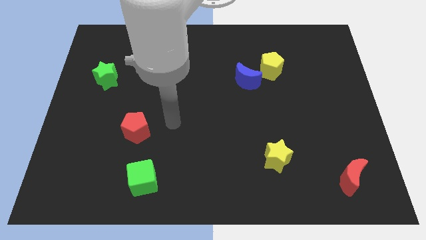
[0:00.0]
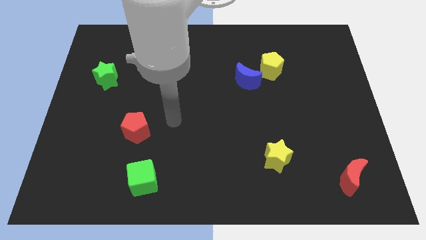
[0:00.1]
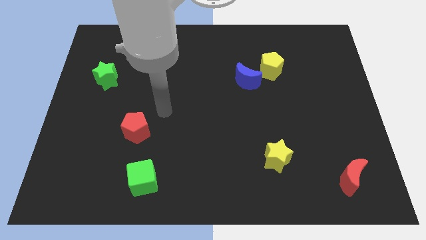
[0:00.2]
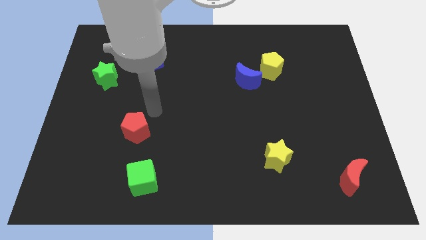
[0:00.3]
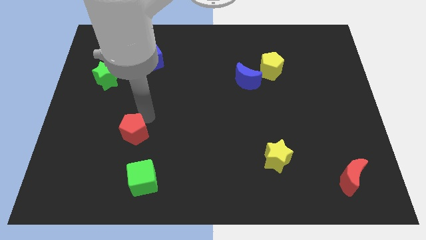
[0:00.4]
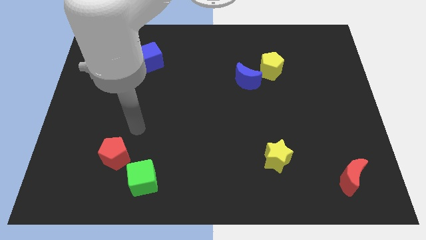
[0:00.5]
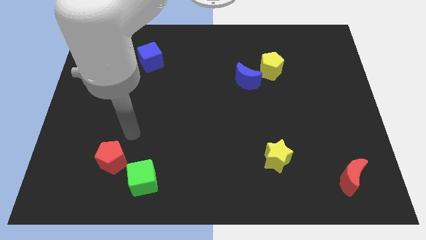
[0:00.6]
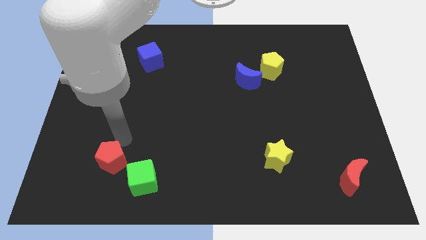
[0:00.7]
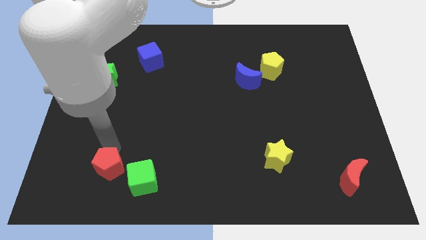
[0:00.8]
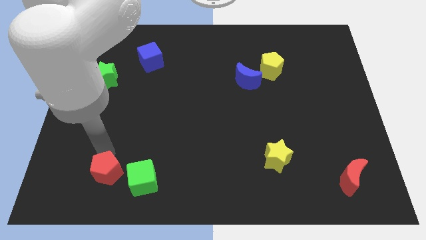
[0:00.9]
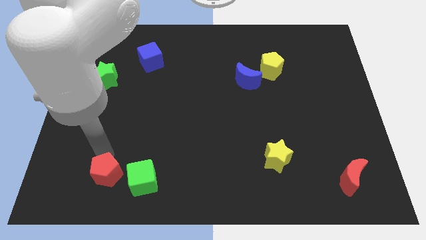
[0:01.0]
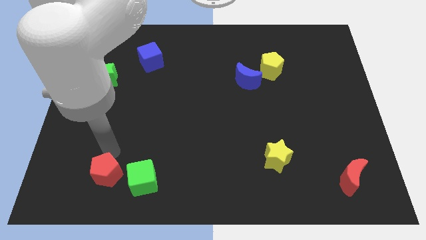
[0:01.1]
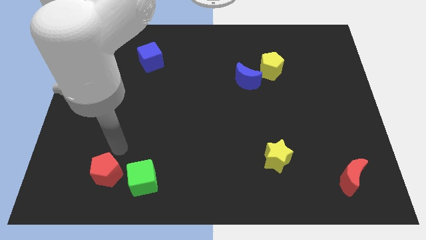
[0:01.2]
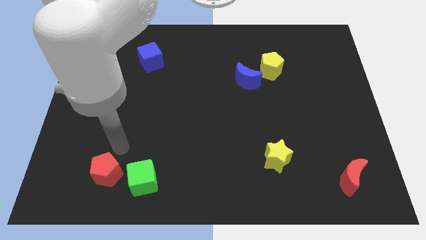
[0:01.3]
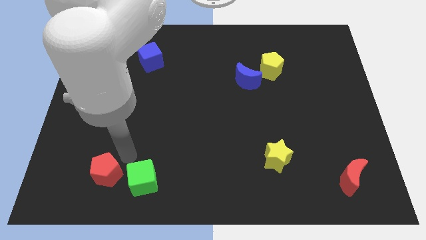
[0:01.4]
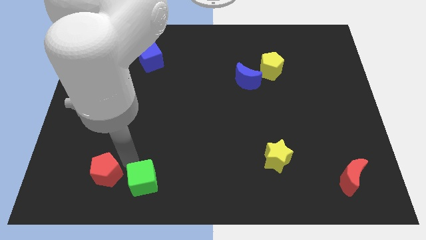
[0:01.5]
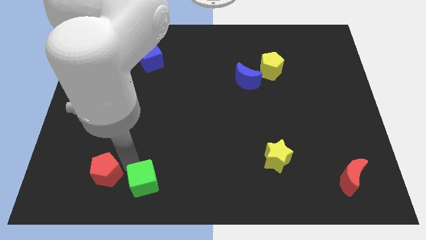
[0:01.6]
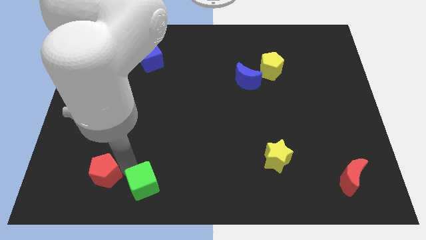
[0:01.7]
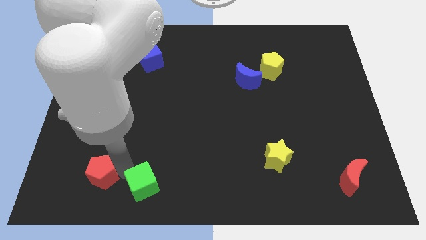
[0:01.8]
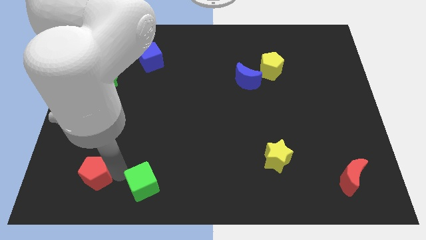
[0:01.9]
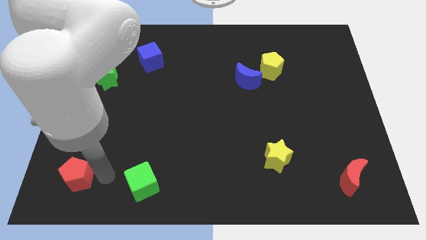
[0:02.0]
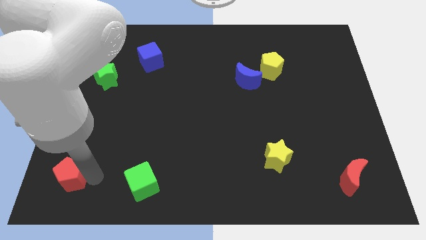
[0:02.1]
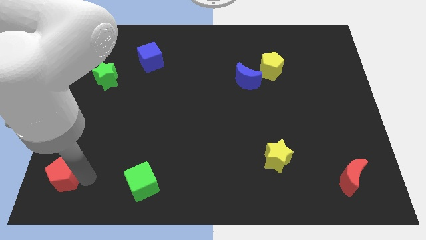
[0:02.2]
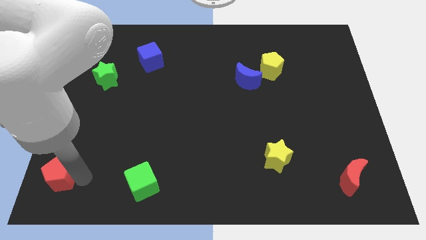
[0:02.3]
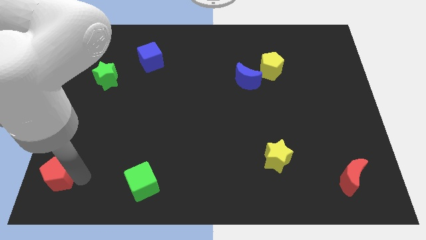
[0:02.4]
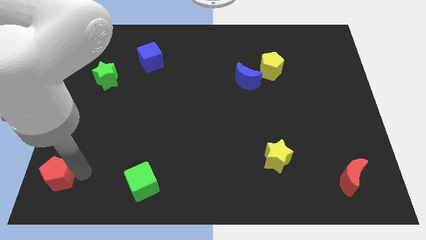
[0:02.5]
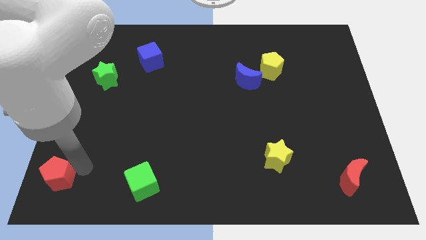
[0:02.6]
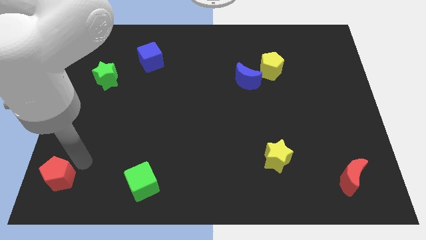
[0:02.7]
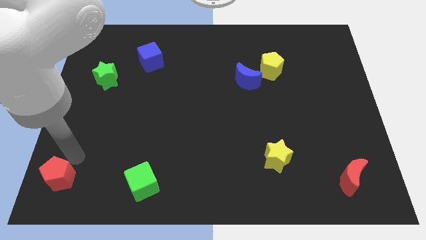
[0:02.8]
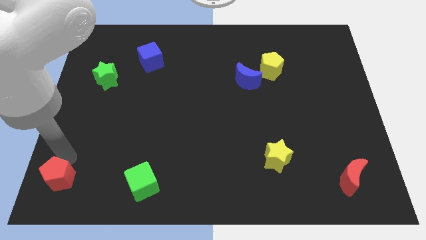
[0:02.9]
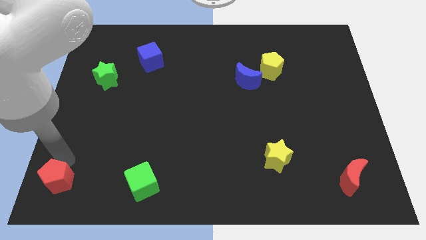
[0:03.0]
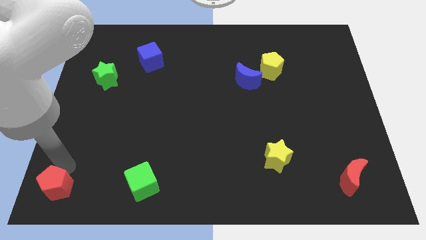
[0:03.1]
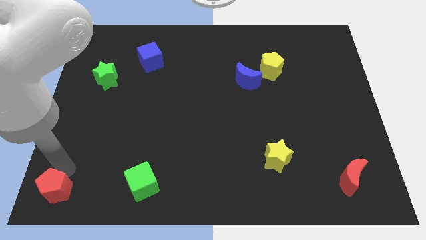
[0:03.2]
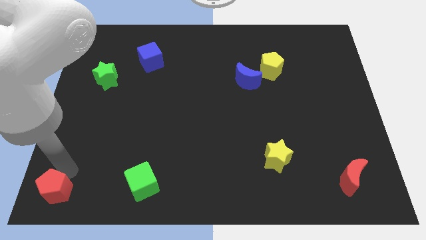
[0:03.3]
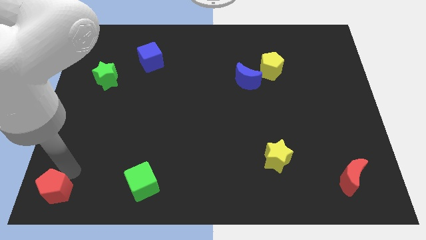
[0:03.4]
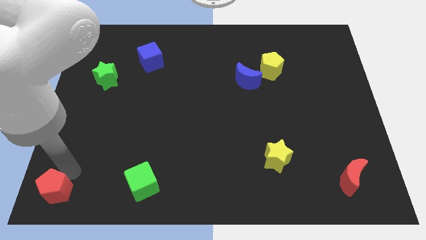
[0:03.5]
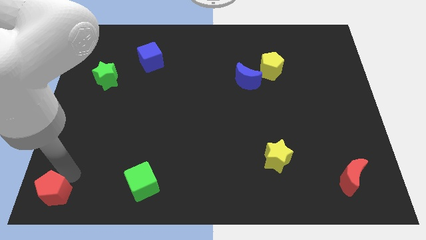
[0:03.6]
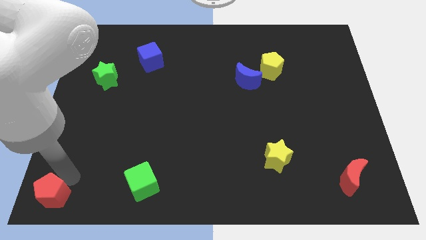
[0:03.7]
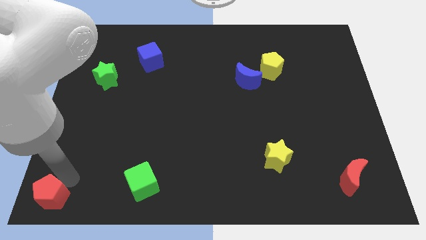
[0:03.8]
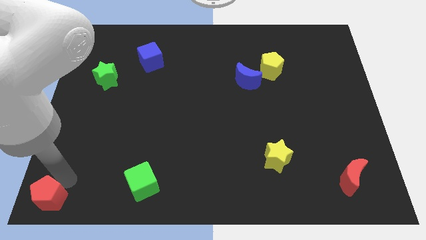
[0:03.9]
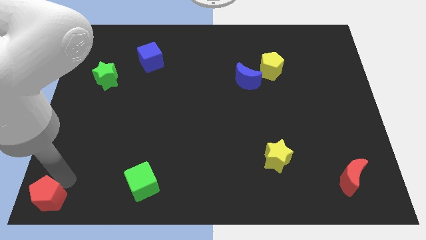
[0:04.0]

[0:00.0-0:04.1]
place the red pentagon left to the green cube

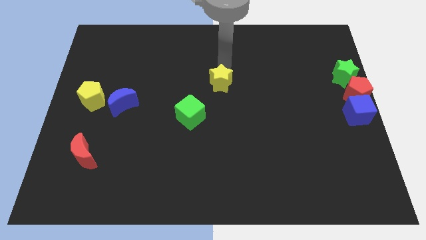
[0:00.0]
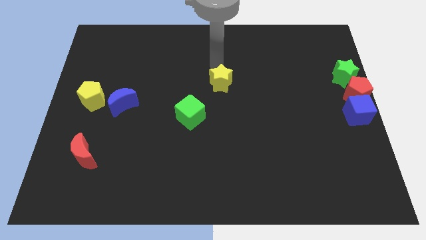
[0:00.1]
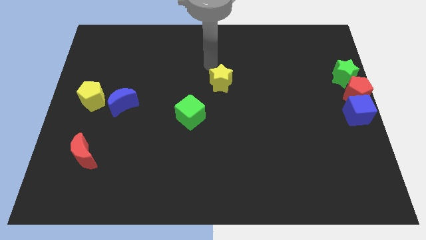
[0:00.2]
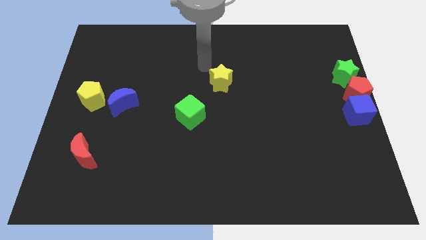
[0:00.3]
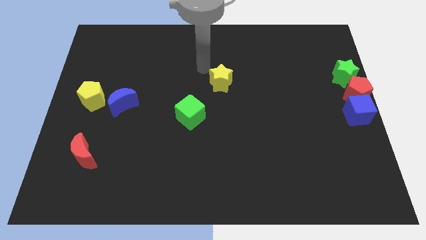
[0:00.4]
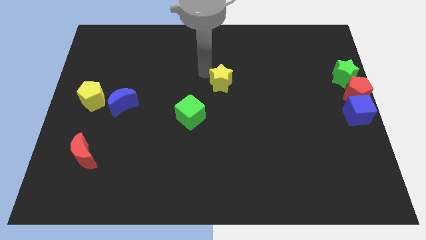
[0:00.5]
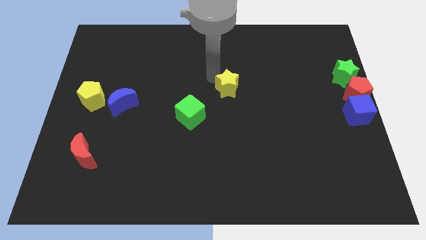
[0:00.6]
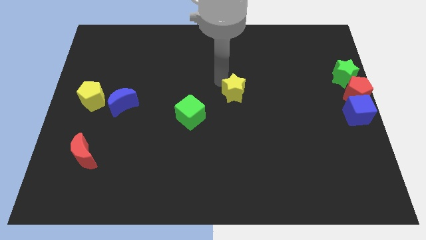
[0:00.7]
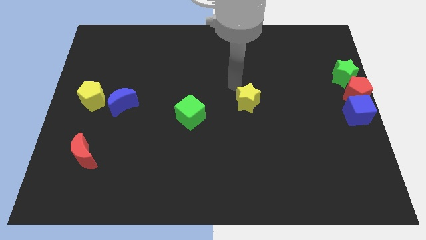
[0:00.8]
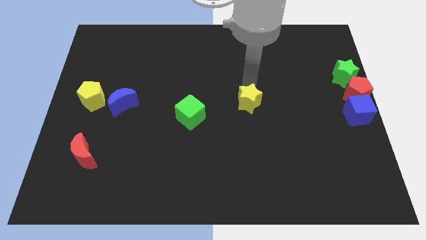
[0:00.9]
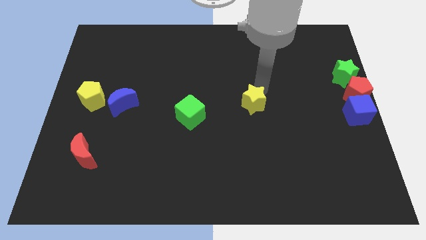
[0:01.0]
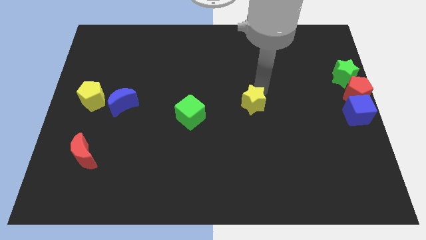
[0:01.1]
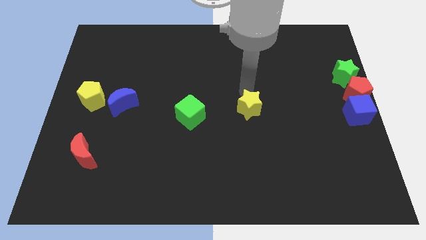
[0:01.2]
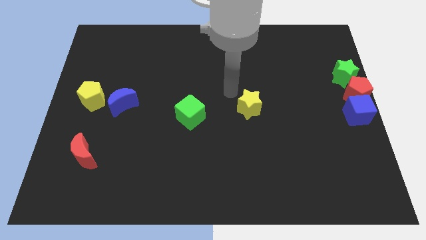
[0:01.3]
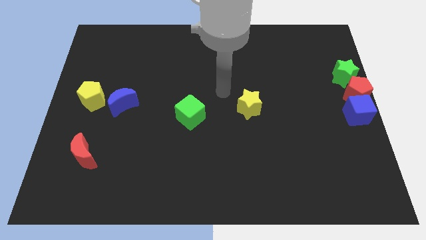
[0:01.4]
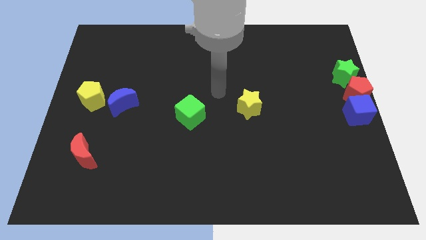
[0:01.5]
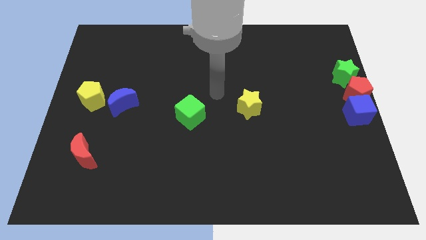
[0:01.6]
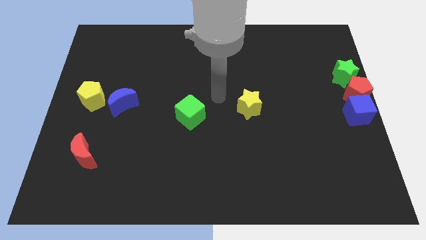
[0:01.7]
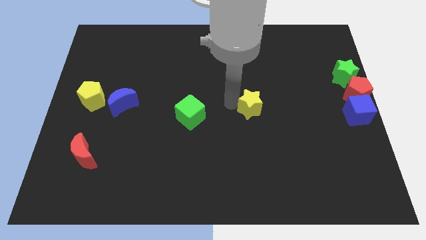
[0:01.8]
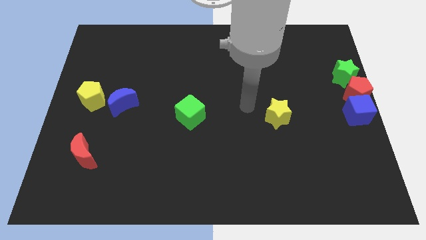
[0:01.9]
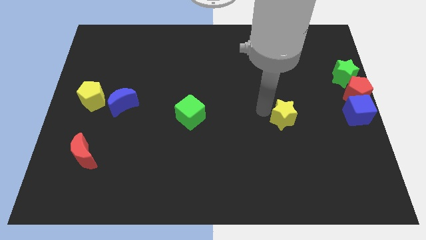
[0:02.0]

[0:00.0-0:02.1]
move the yellow star in between blue cube and green cube

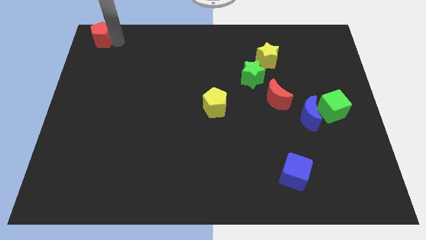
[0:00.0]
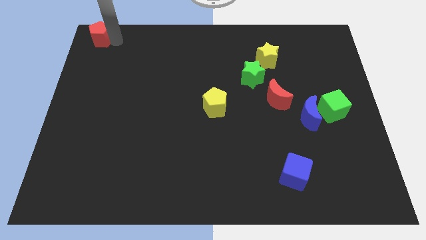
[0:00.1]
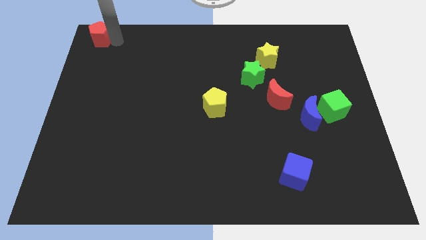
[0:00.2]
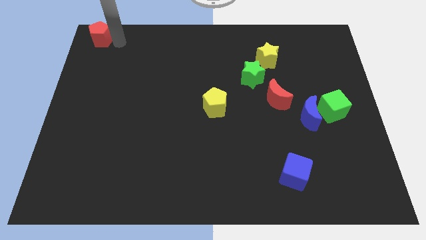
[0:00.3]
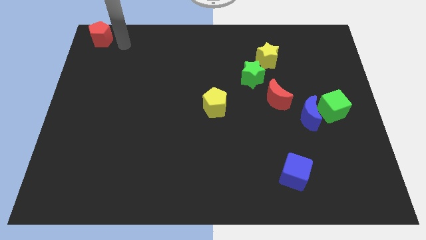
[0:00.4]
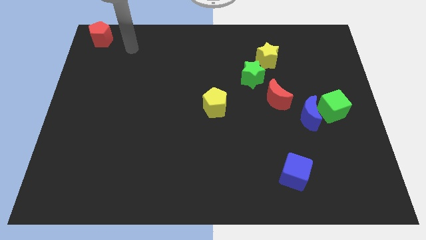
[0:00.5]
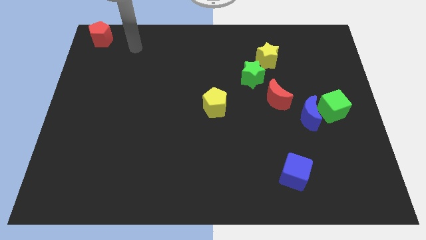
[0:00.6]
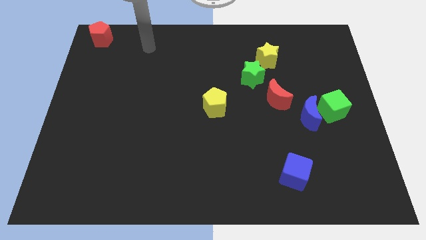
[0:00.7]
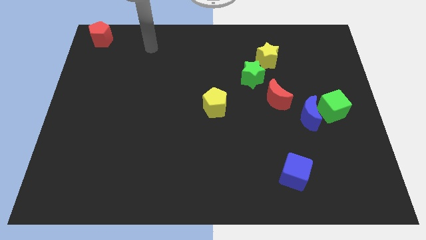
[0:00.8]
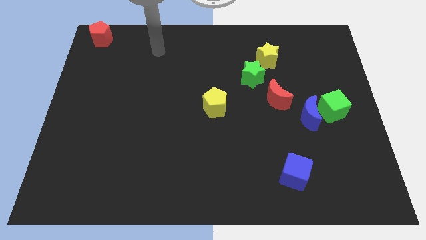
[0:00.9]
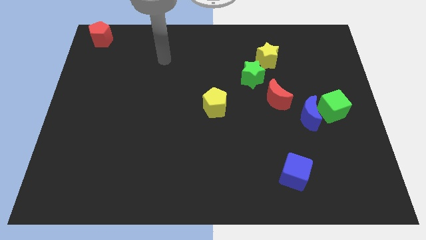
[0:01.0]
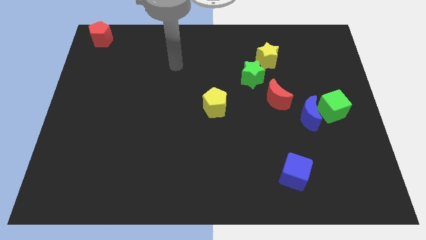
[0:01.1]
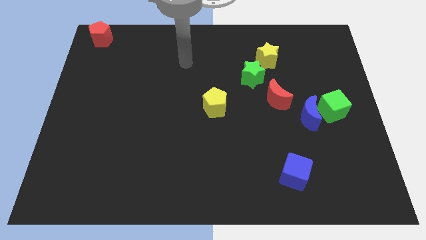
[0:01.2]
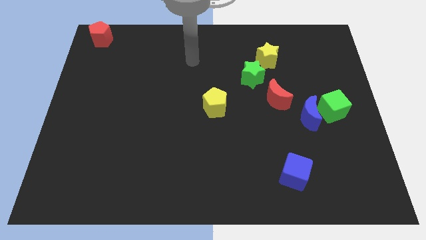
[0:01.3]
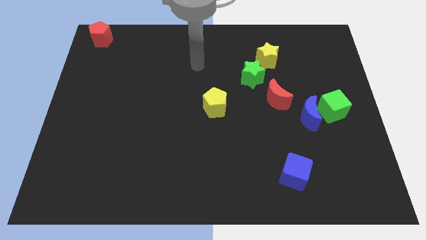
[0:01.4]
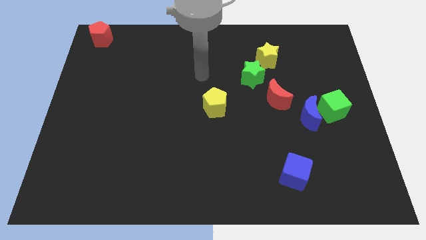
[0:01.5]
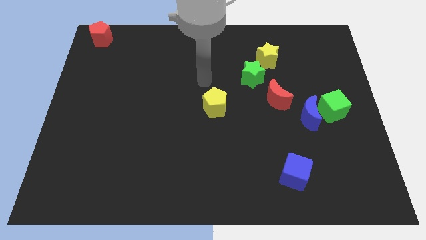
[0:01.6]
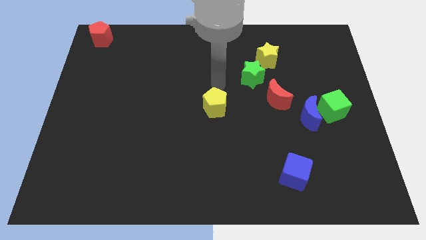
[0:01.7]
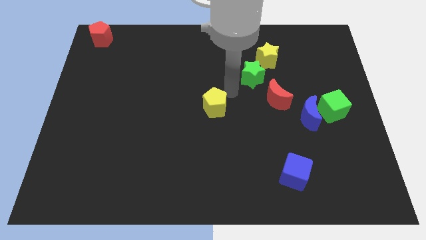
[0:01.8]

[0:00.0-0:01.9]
move the arm away from the red pentagon

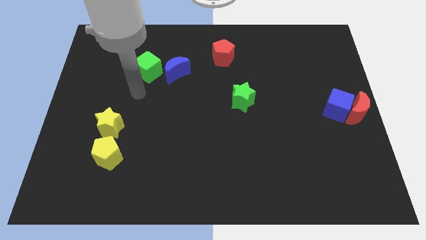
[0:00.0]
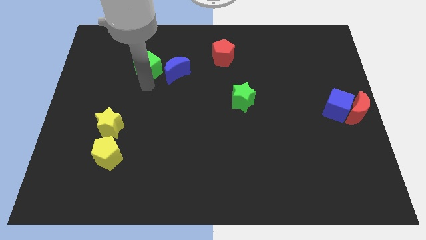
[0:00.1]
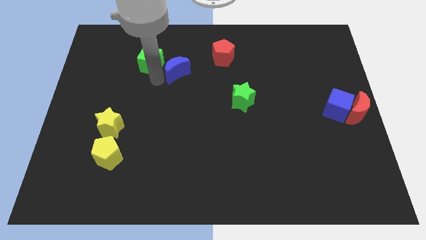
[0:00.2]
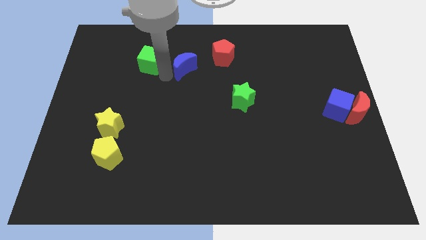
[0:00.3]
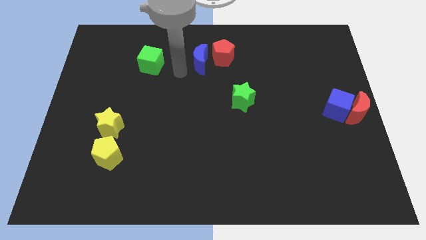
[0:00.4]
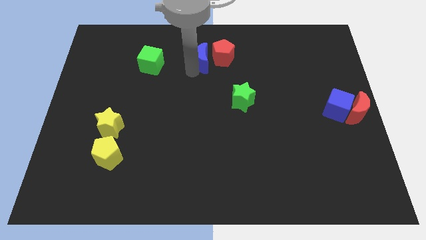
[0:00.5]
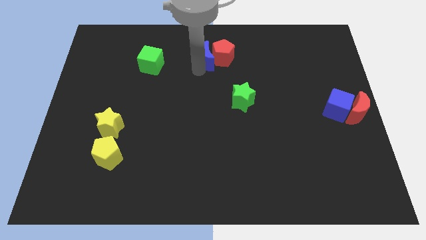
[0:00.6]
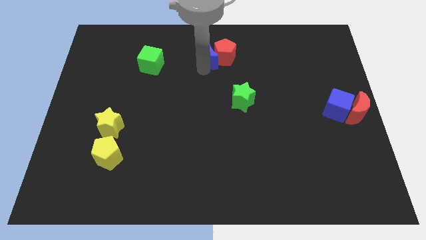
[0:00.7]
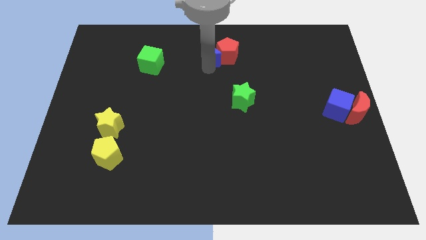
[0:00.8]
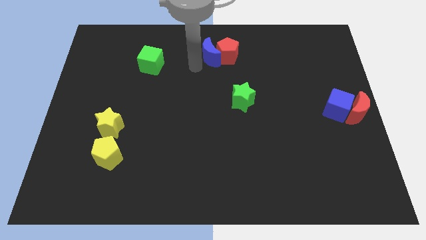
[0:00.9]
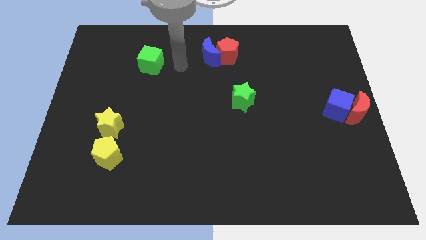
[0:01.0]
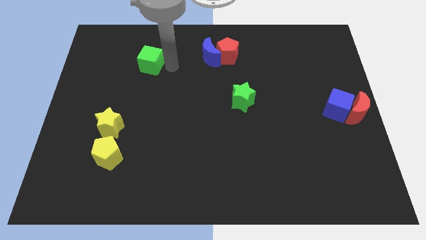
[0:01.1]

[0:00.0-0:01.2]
move the blue crescent into the red pentagon
